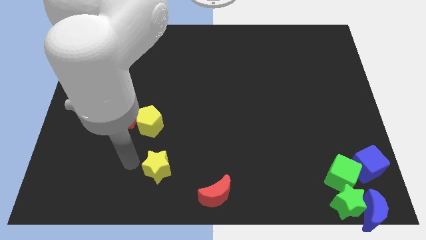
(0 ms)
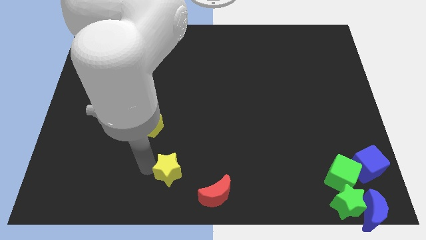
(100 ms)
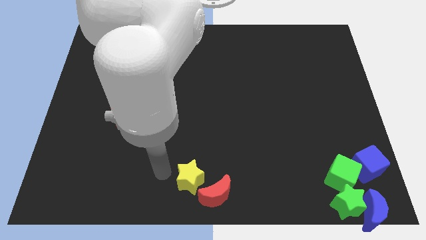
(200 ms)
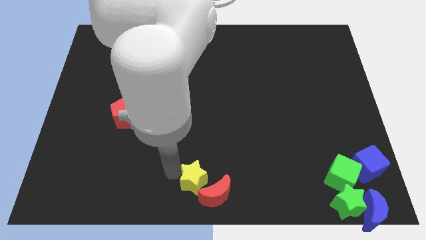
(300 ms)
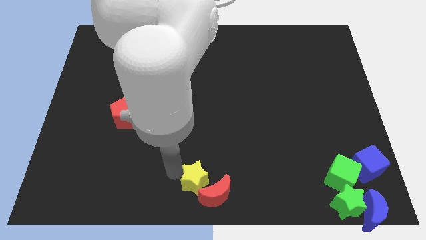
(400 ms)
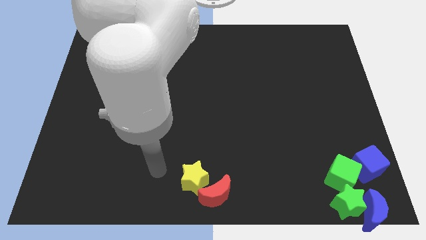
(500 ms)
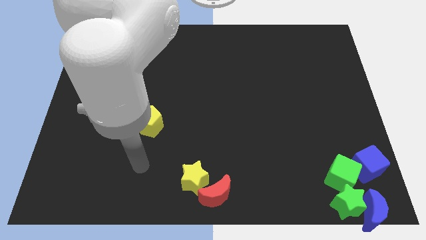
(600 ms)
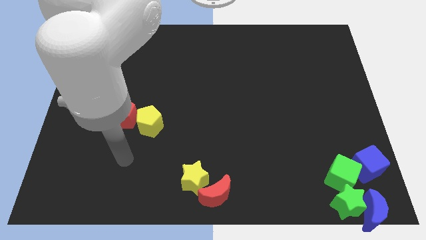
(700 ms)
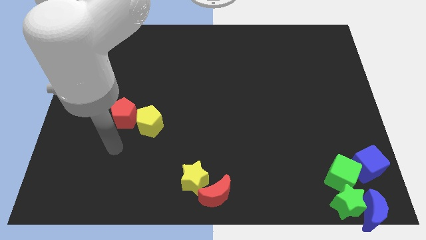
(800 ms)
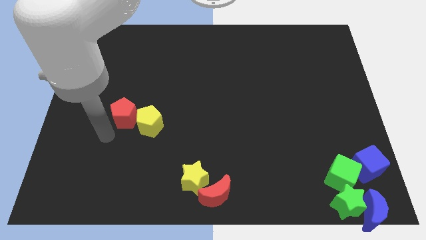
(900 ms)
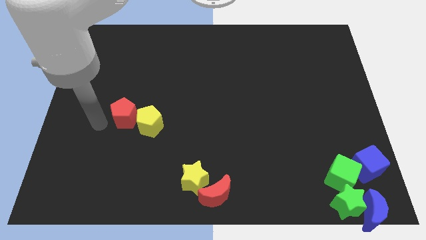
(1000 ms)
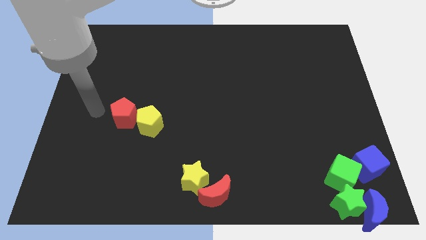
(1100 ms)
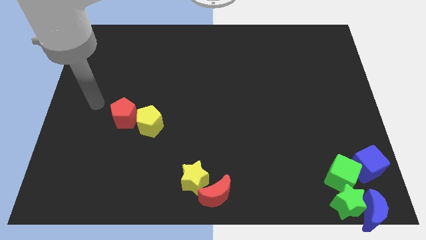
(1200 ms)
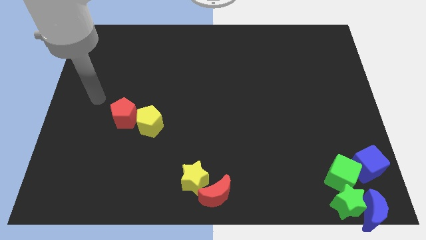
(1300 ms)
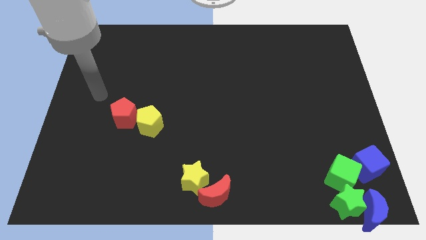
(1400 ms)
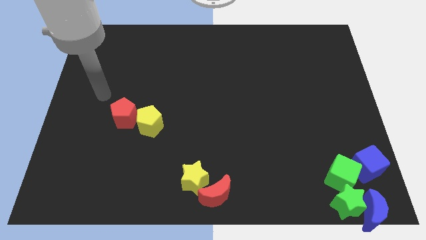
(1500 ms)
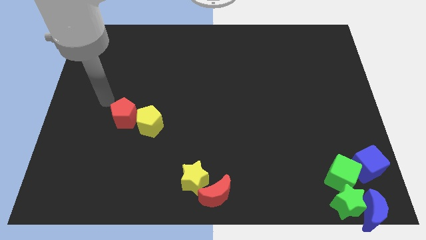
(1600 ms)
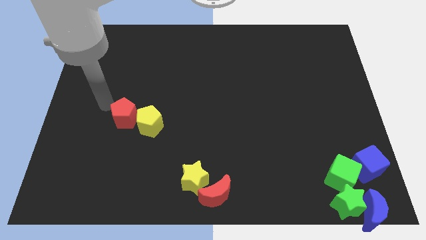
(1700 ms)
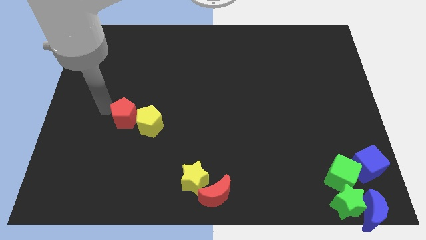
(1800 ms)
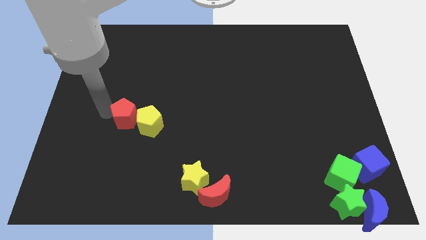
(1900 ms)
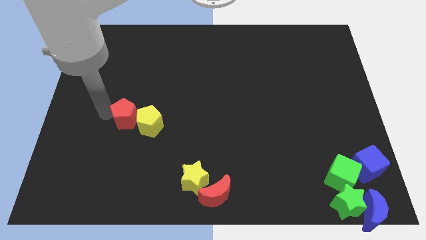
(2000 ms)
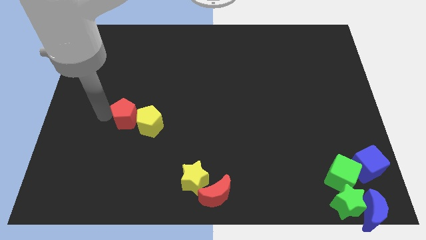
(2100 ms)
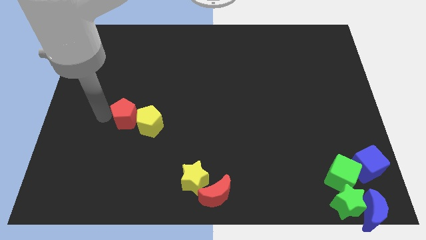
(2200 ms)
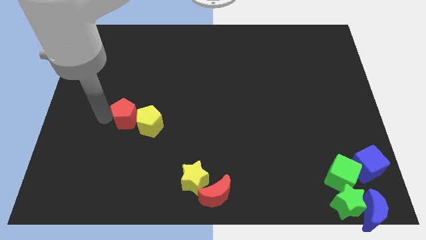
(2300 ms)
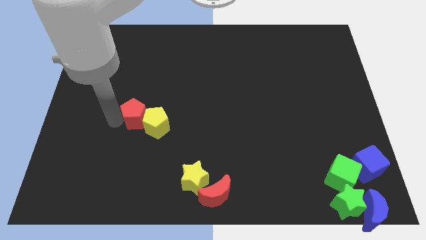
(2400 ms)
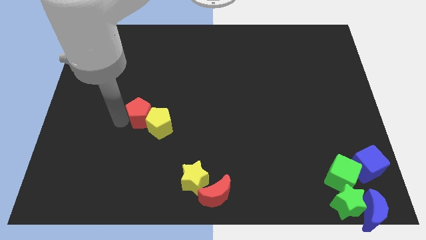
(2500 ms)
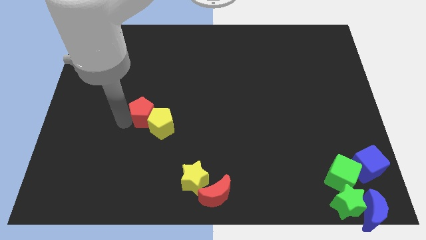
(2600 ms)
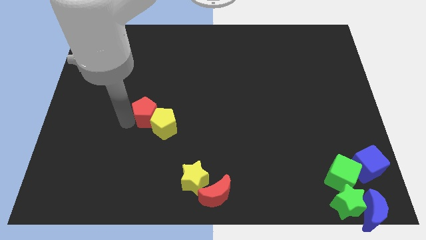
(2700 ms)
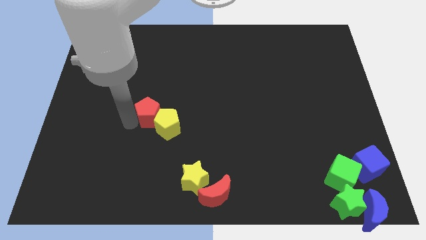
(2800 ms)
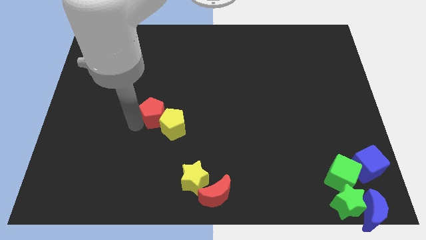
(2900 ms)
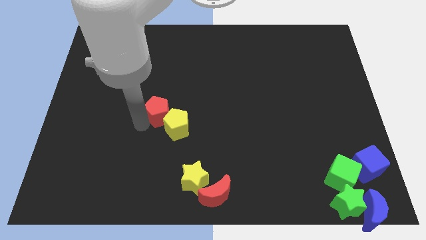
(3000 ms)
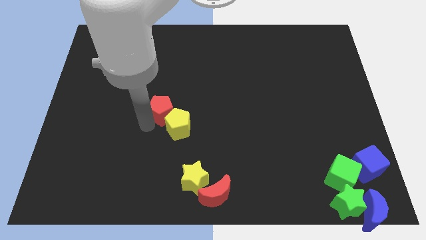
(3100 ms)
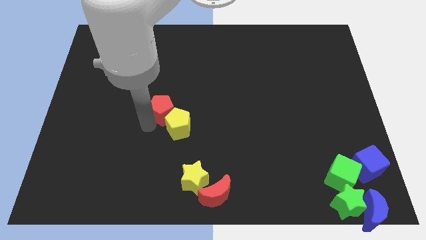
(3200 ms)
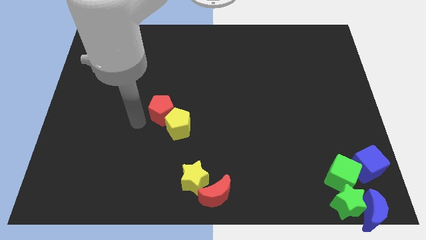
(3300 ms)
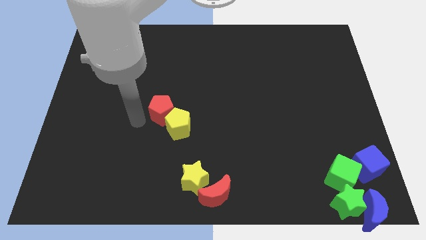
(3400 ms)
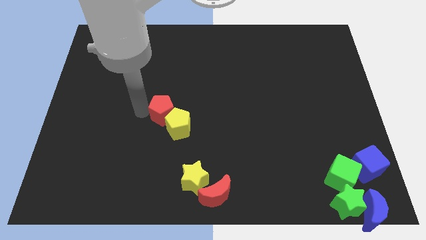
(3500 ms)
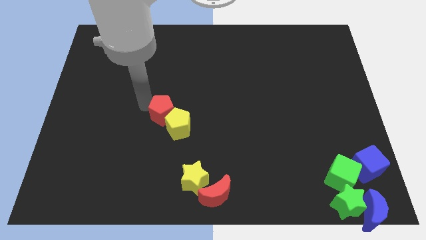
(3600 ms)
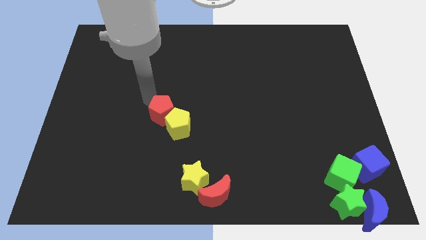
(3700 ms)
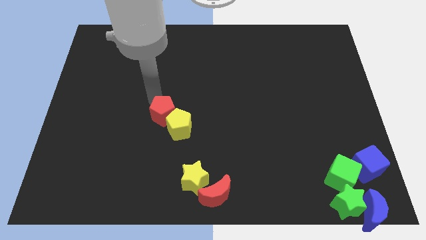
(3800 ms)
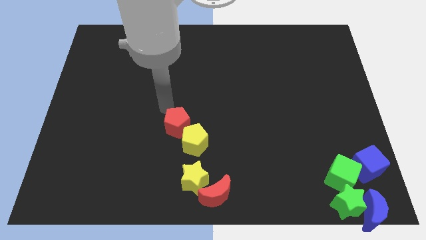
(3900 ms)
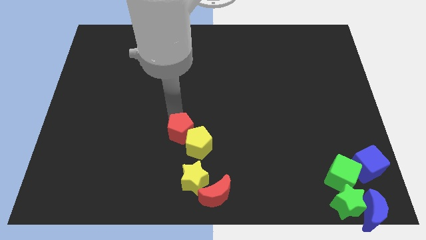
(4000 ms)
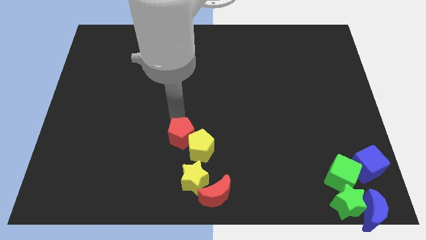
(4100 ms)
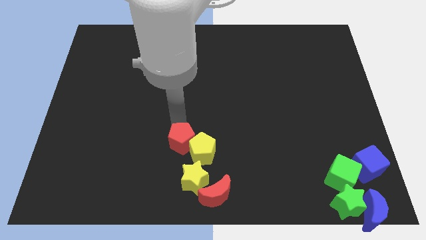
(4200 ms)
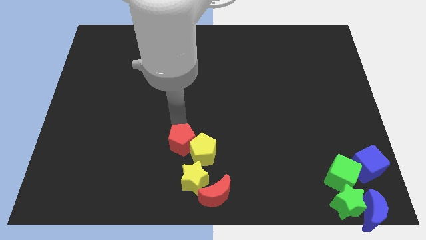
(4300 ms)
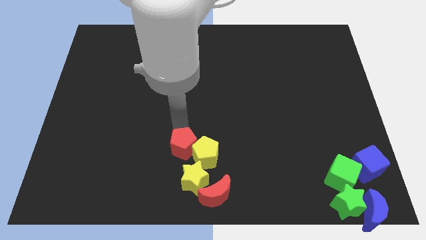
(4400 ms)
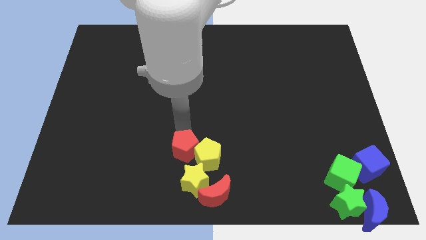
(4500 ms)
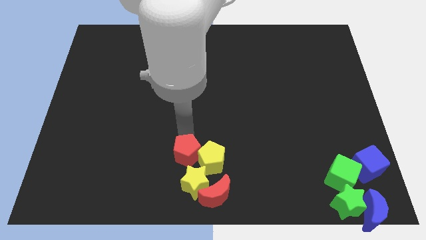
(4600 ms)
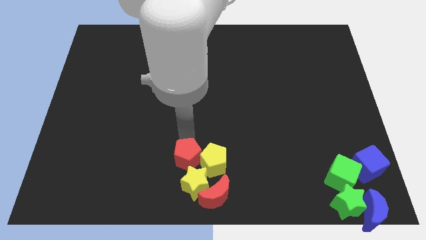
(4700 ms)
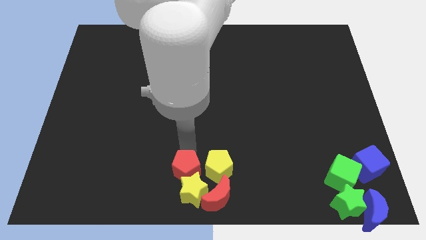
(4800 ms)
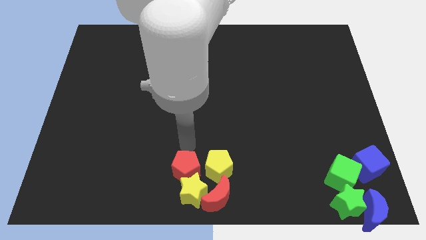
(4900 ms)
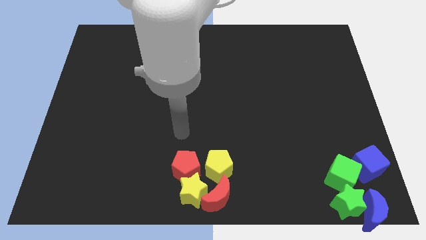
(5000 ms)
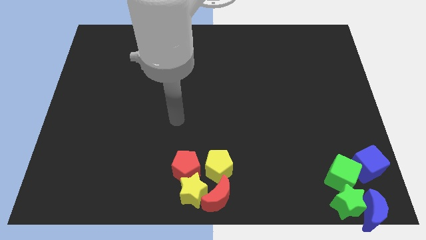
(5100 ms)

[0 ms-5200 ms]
move the red pentagon yellow pentagon and the yellow star into the red crescent

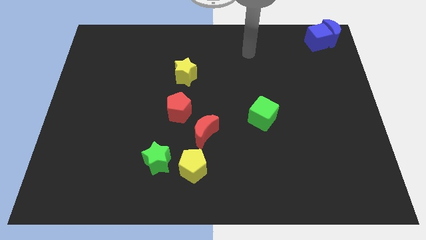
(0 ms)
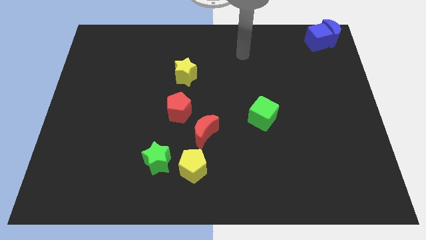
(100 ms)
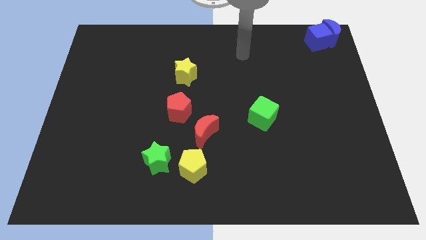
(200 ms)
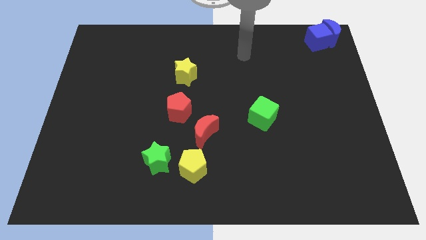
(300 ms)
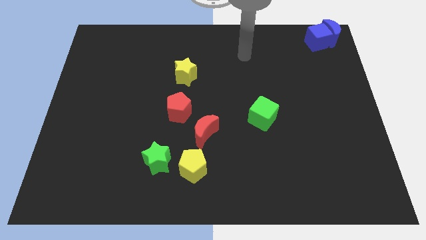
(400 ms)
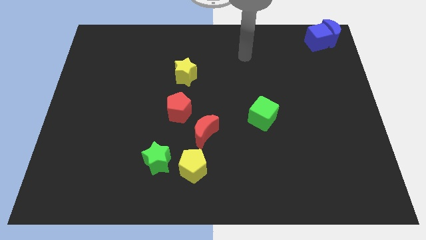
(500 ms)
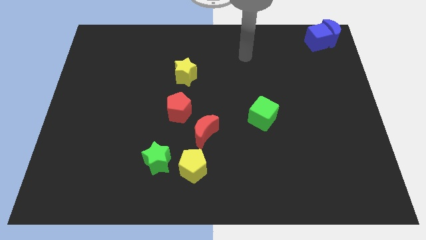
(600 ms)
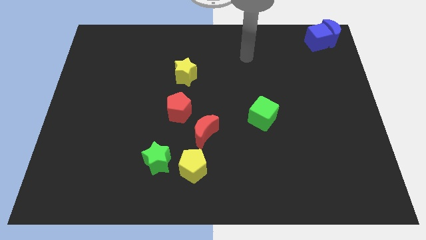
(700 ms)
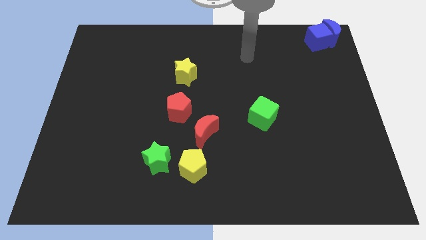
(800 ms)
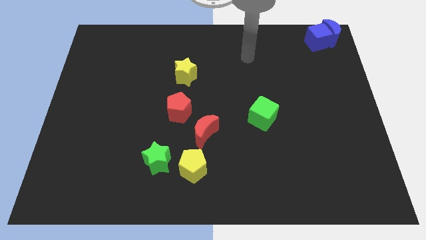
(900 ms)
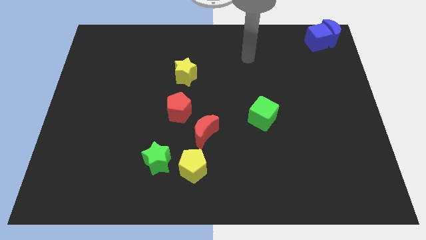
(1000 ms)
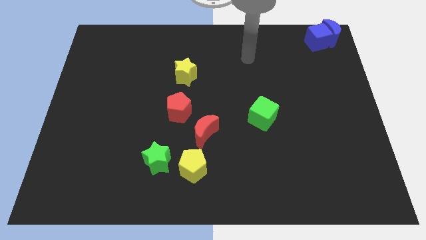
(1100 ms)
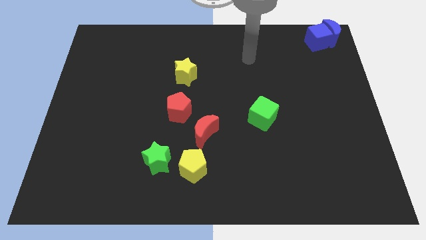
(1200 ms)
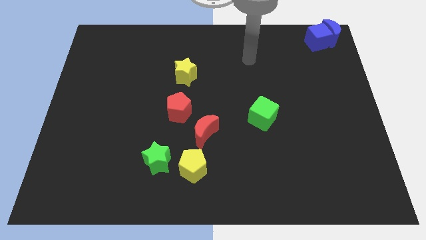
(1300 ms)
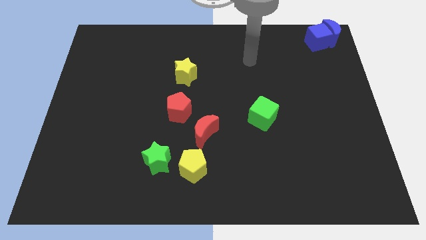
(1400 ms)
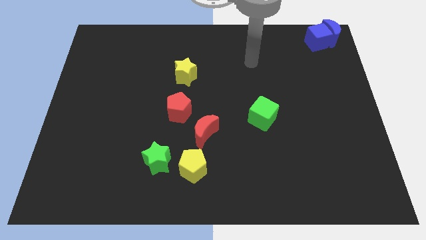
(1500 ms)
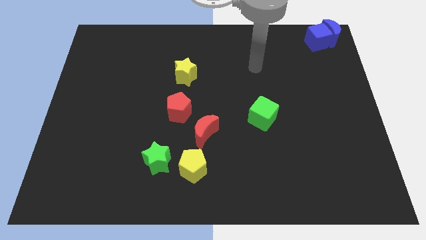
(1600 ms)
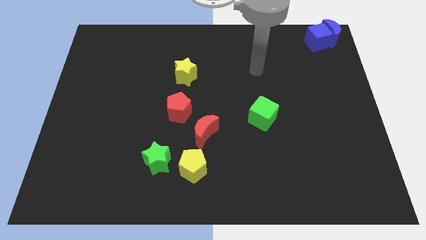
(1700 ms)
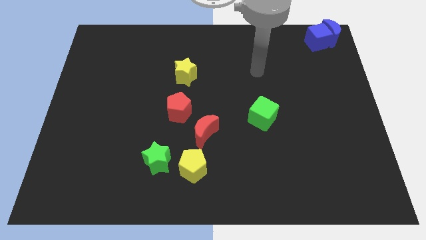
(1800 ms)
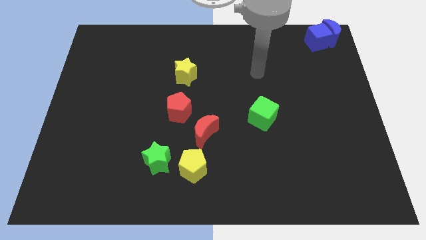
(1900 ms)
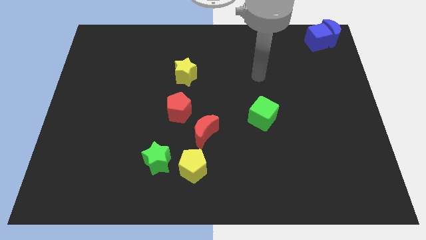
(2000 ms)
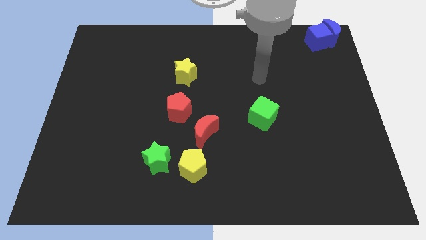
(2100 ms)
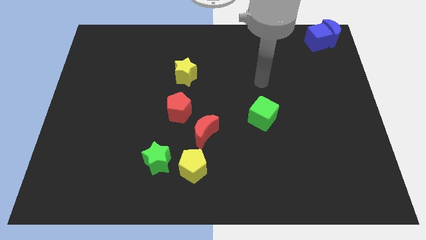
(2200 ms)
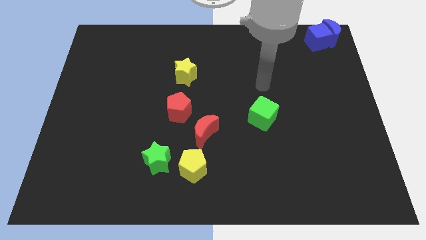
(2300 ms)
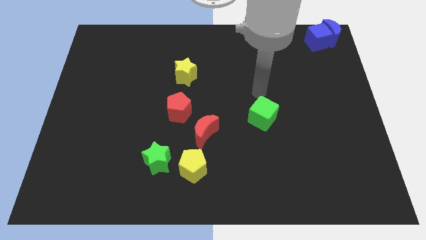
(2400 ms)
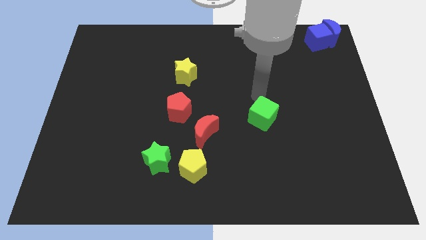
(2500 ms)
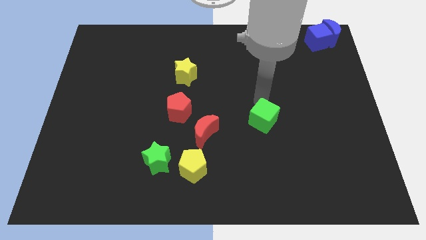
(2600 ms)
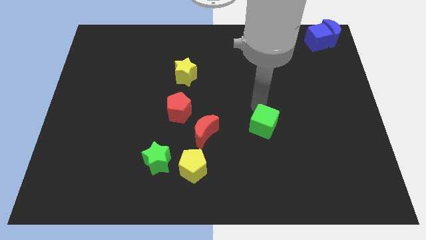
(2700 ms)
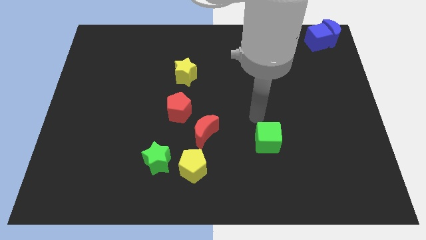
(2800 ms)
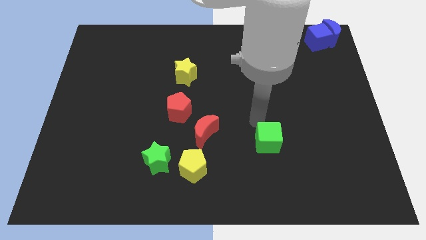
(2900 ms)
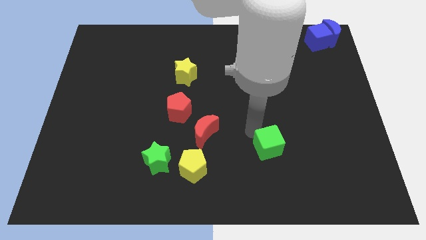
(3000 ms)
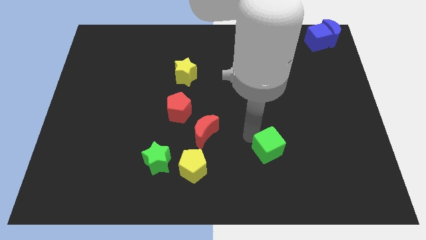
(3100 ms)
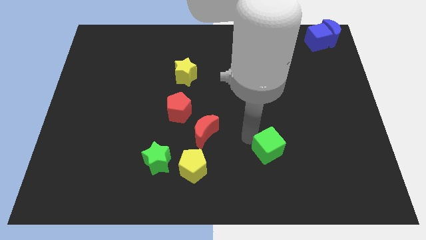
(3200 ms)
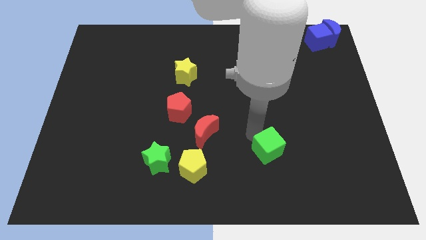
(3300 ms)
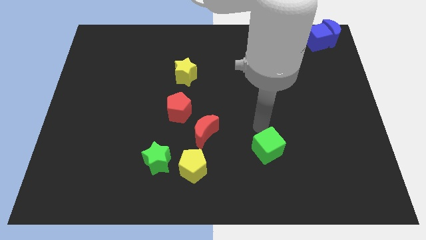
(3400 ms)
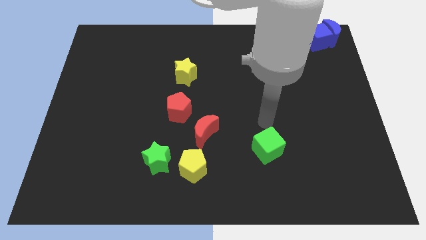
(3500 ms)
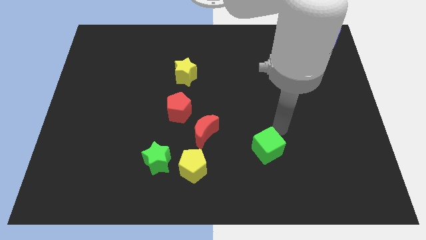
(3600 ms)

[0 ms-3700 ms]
push the green cube down slightly

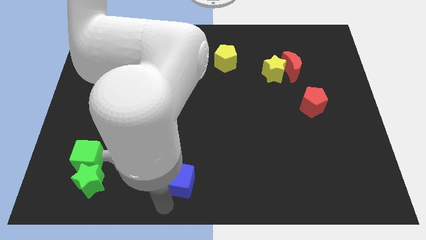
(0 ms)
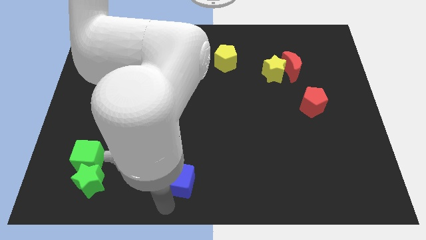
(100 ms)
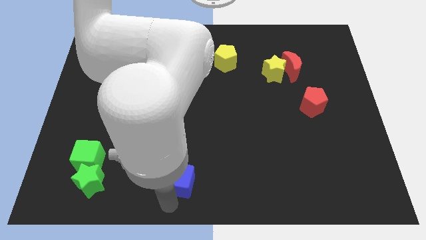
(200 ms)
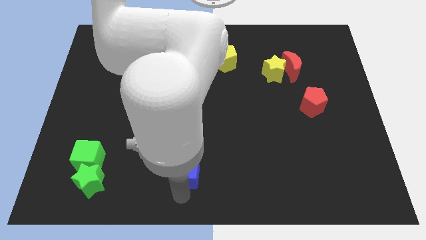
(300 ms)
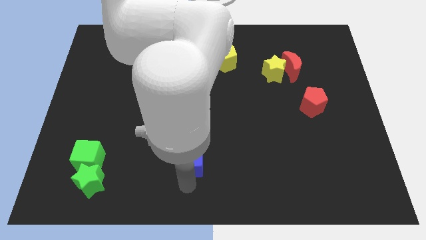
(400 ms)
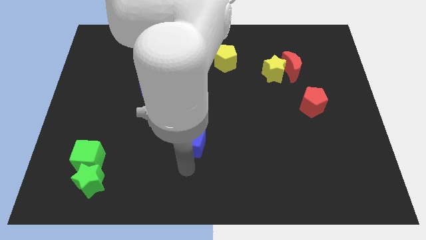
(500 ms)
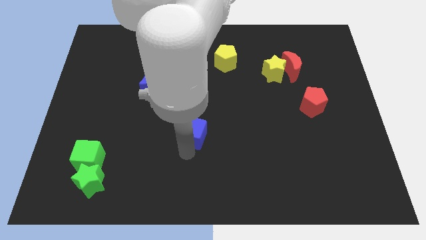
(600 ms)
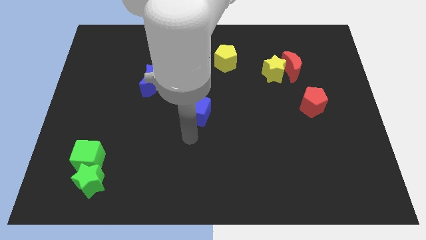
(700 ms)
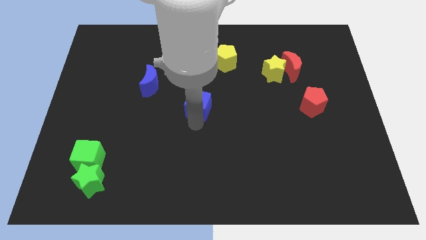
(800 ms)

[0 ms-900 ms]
push the blue cube at the center of the board
